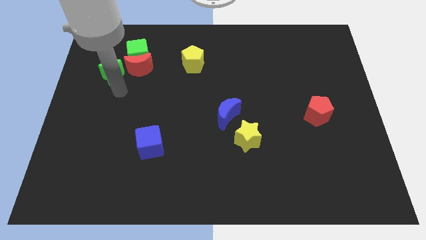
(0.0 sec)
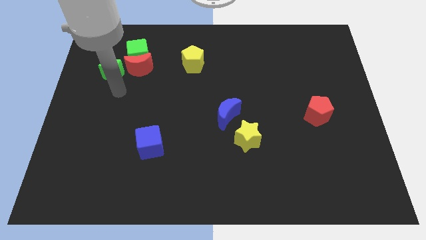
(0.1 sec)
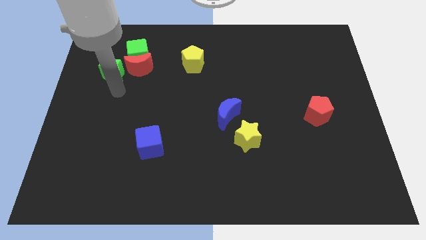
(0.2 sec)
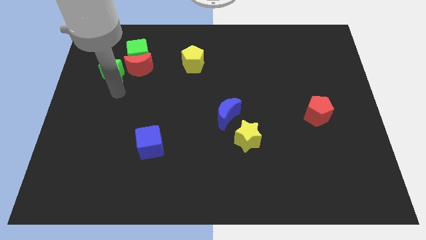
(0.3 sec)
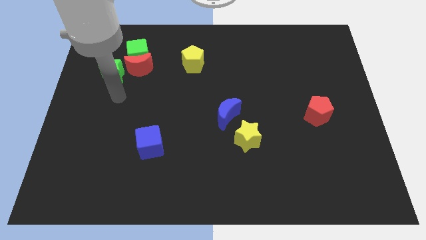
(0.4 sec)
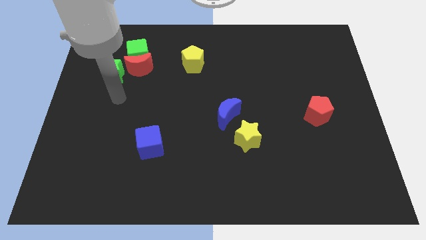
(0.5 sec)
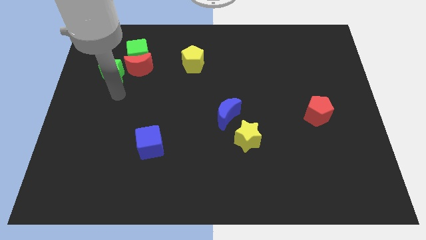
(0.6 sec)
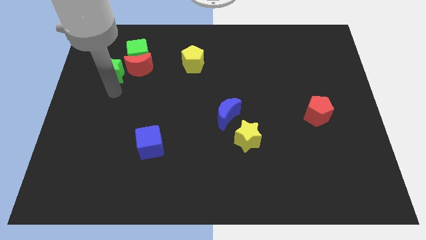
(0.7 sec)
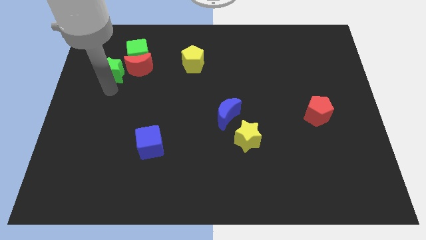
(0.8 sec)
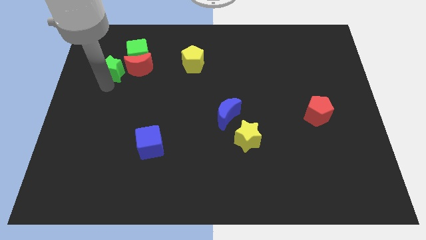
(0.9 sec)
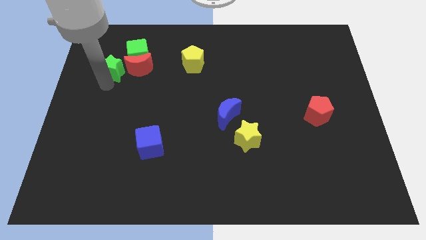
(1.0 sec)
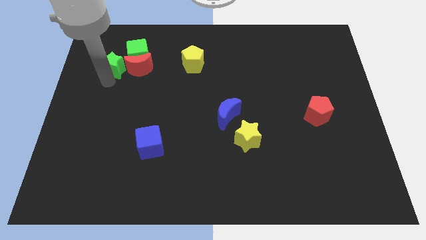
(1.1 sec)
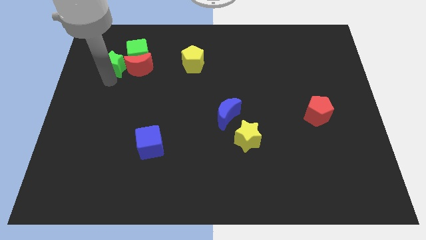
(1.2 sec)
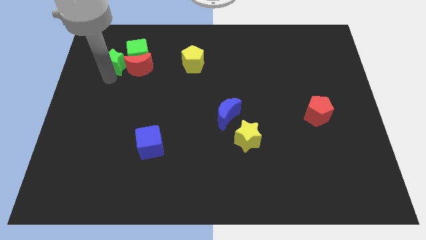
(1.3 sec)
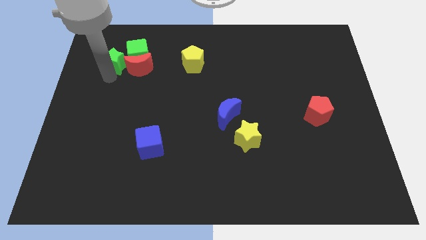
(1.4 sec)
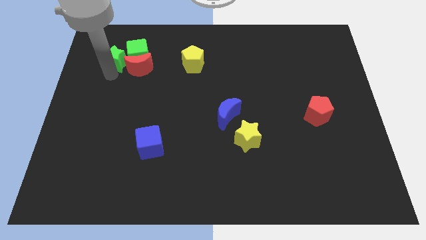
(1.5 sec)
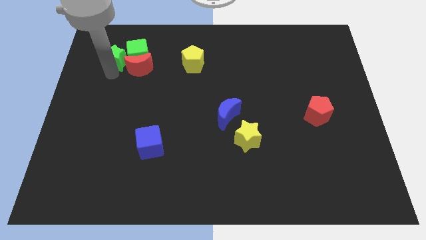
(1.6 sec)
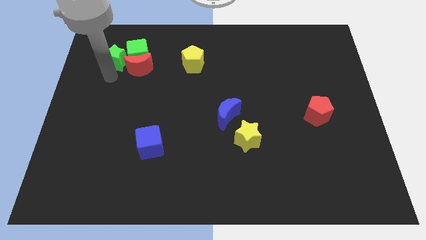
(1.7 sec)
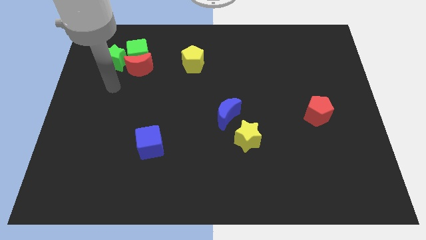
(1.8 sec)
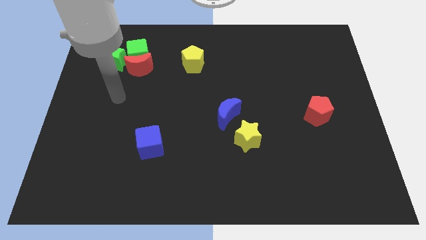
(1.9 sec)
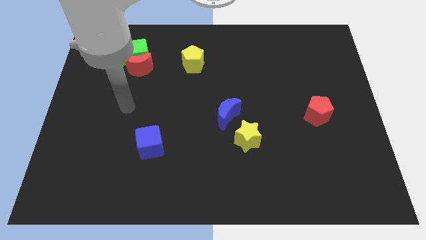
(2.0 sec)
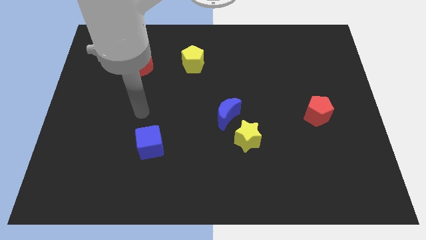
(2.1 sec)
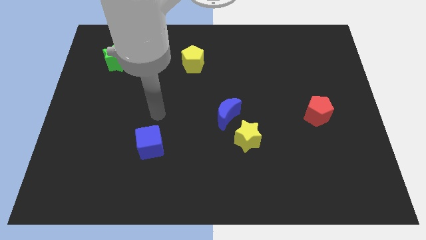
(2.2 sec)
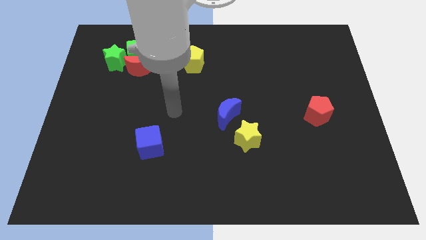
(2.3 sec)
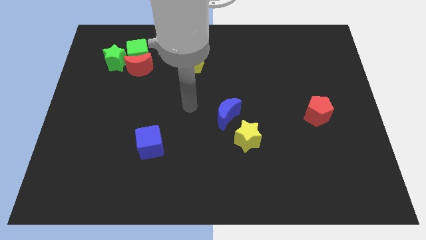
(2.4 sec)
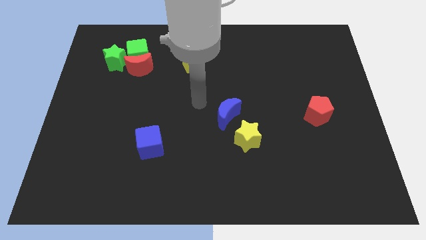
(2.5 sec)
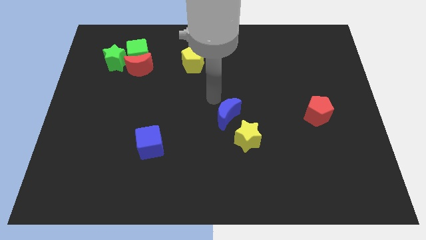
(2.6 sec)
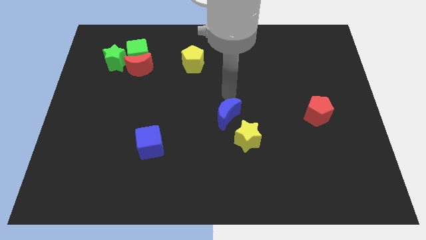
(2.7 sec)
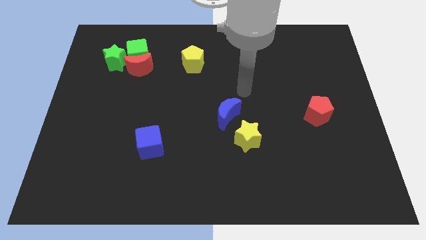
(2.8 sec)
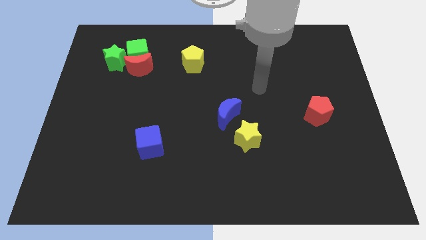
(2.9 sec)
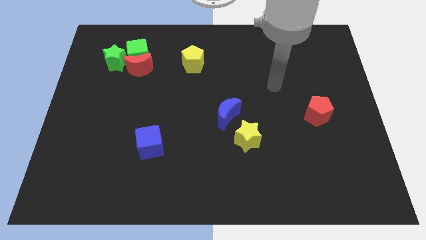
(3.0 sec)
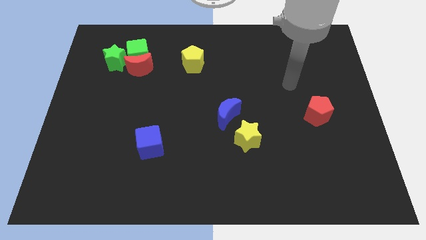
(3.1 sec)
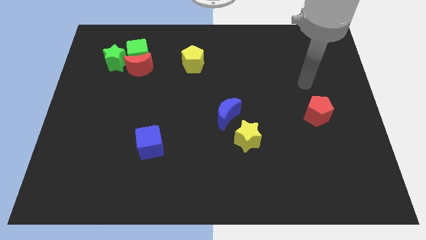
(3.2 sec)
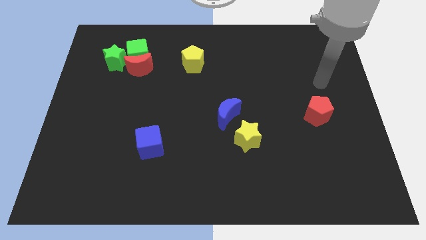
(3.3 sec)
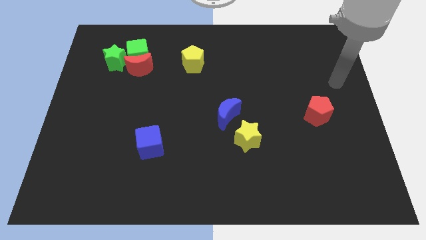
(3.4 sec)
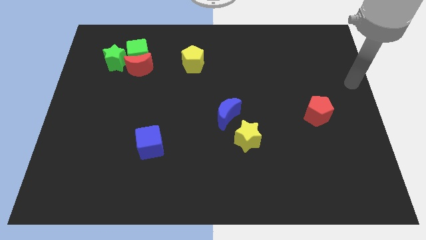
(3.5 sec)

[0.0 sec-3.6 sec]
move the green star close to the left side of the green cube

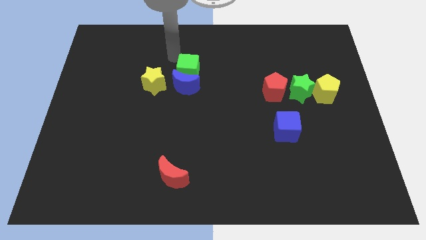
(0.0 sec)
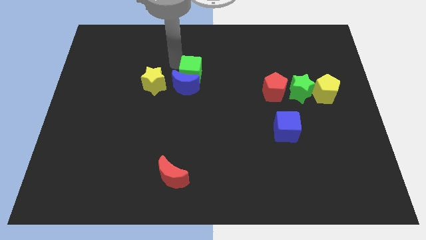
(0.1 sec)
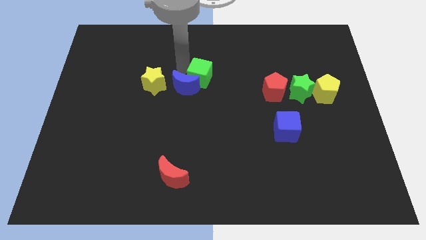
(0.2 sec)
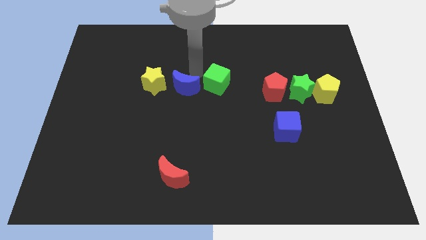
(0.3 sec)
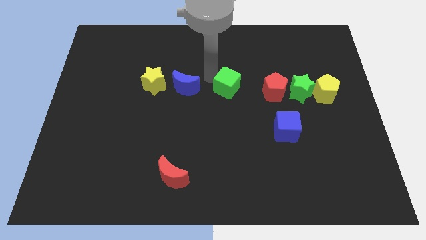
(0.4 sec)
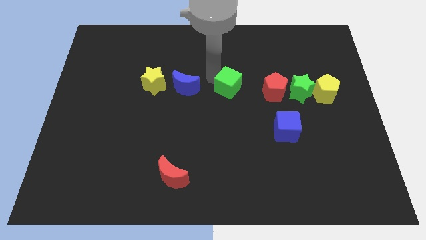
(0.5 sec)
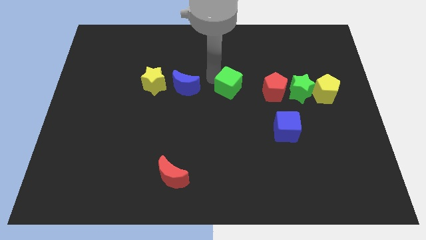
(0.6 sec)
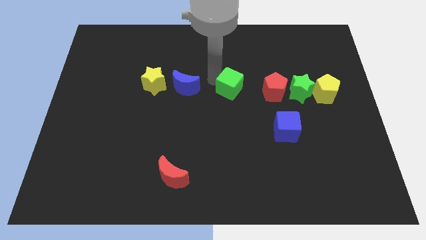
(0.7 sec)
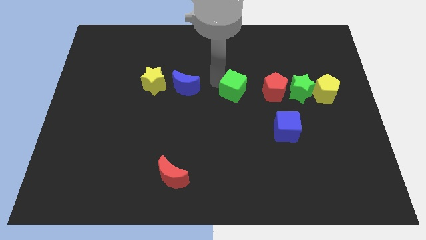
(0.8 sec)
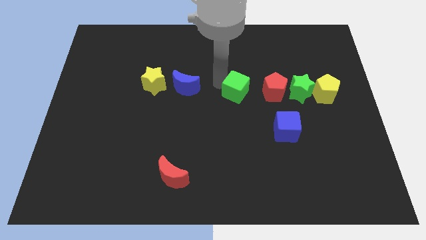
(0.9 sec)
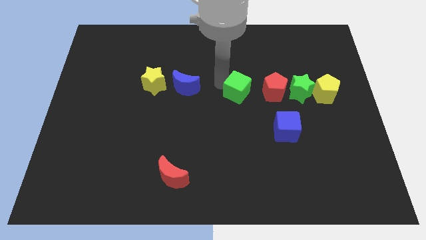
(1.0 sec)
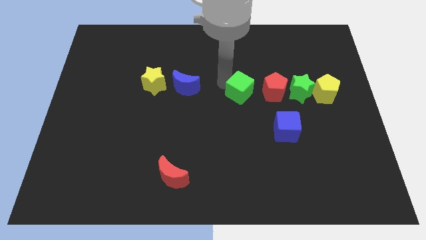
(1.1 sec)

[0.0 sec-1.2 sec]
push the green cube left to the red pentagon

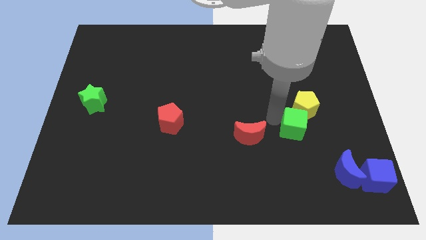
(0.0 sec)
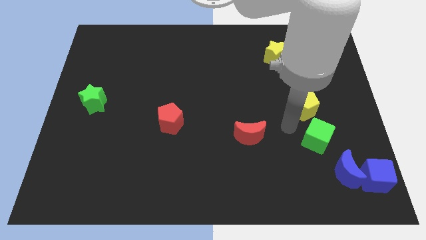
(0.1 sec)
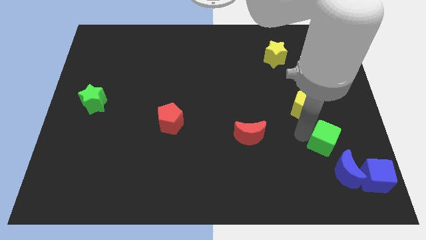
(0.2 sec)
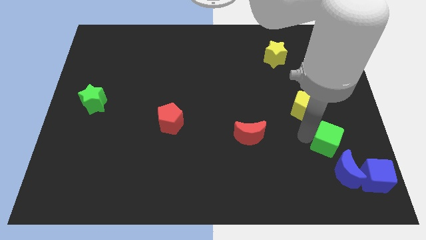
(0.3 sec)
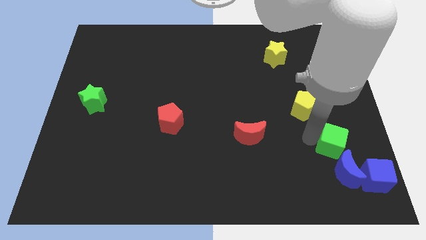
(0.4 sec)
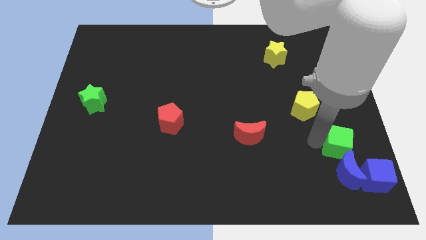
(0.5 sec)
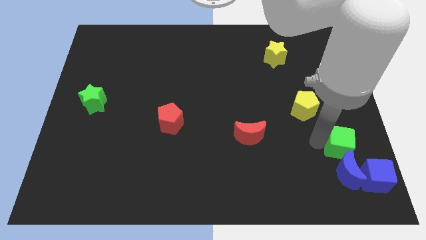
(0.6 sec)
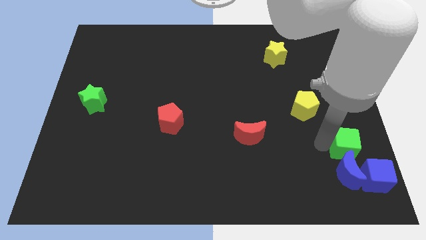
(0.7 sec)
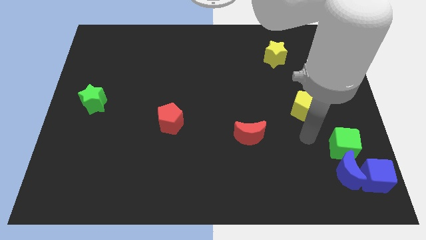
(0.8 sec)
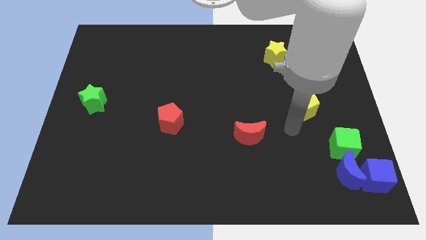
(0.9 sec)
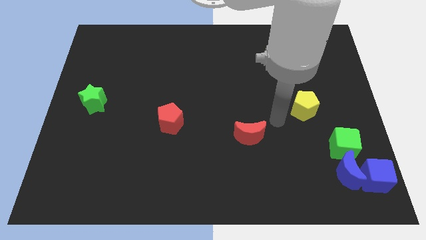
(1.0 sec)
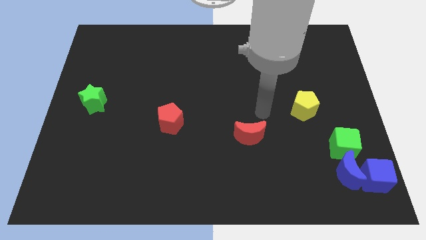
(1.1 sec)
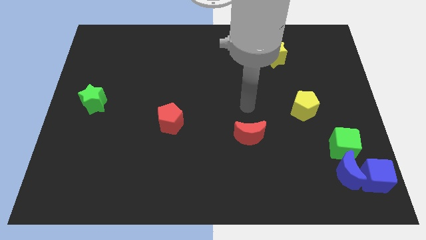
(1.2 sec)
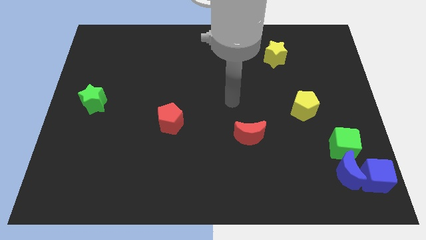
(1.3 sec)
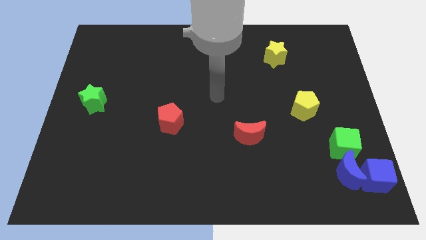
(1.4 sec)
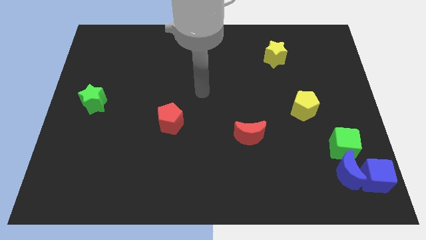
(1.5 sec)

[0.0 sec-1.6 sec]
push the green cube into the blue moon

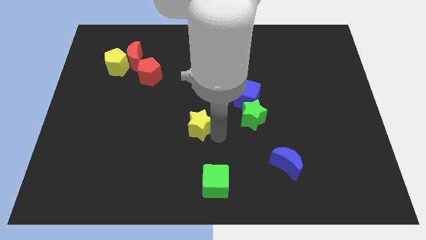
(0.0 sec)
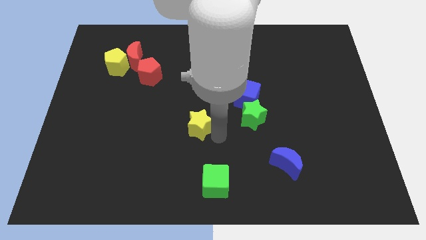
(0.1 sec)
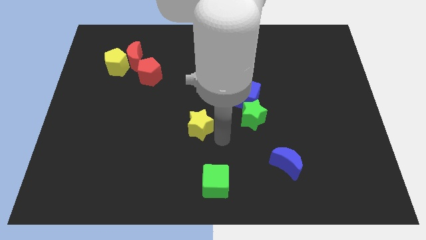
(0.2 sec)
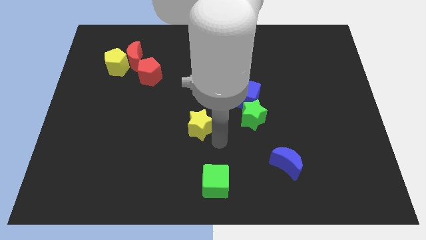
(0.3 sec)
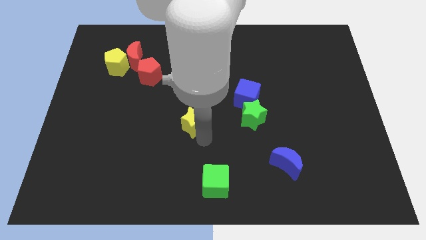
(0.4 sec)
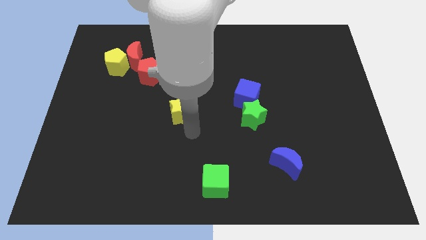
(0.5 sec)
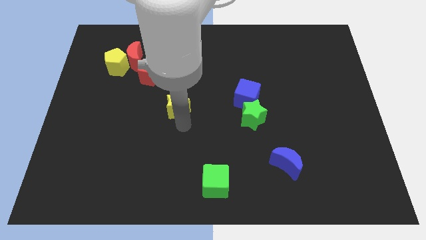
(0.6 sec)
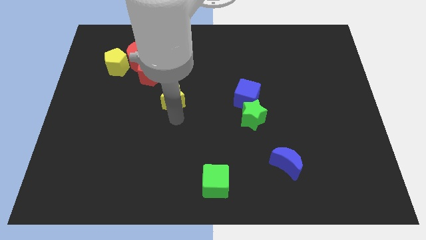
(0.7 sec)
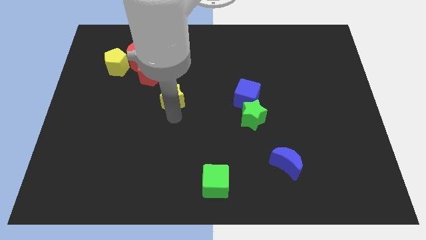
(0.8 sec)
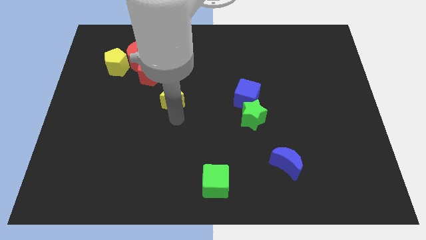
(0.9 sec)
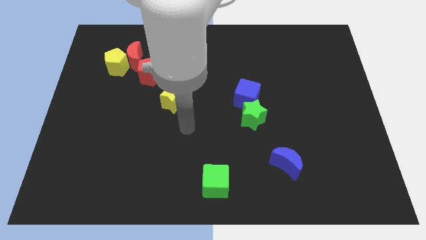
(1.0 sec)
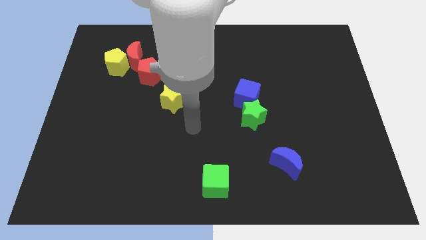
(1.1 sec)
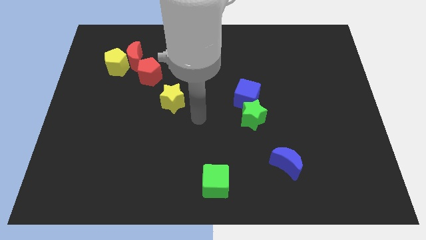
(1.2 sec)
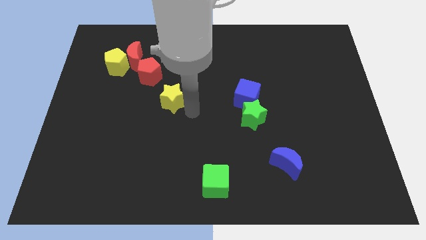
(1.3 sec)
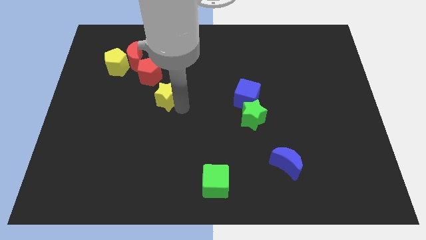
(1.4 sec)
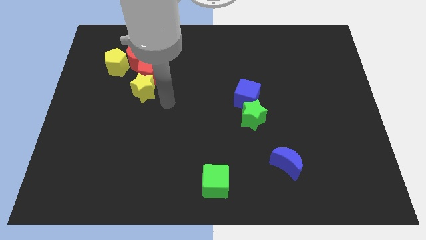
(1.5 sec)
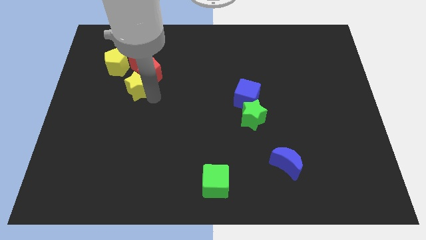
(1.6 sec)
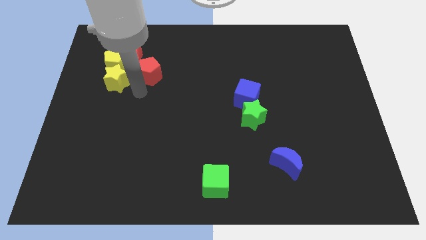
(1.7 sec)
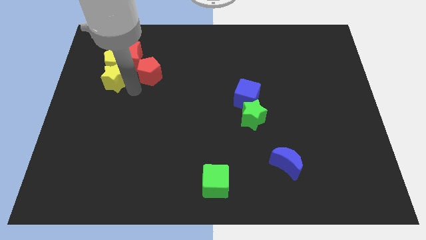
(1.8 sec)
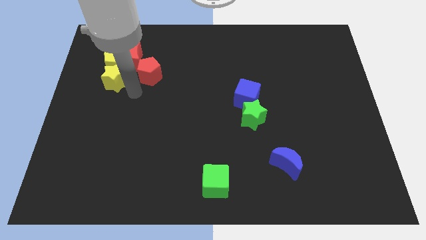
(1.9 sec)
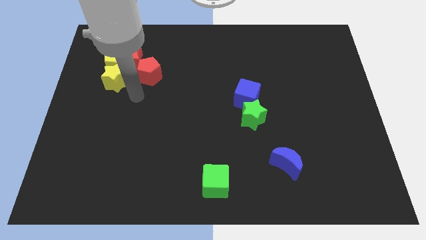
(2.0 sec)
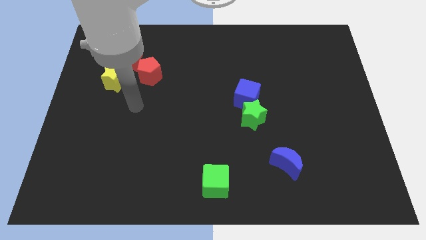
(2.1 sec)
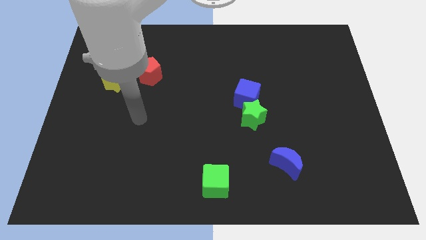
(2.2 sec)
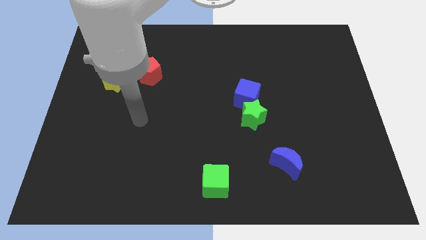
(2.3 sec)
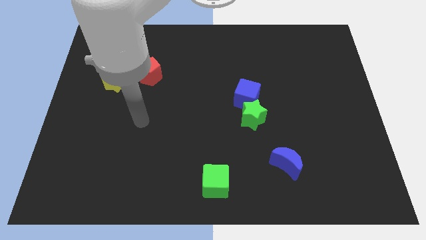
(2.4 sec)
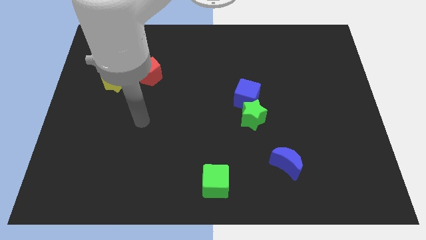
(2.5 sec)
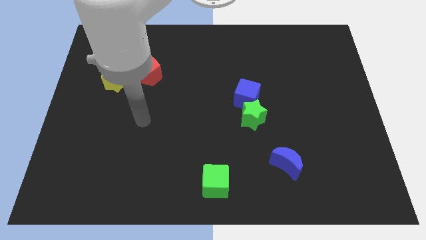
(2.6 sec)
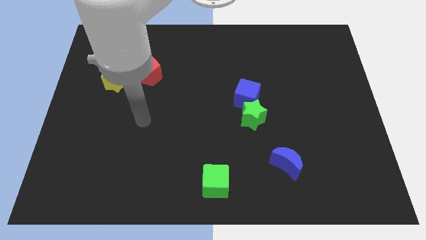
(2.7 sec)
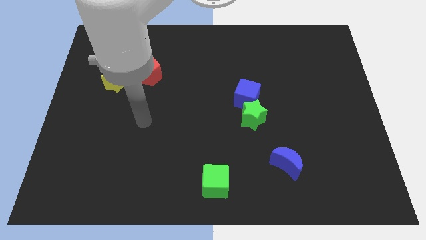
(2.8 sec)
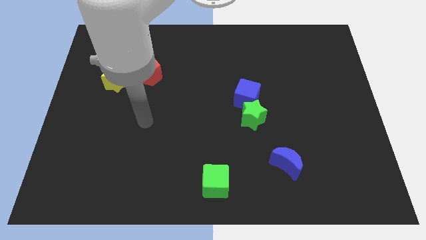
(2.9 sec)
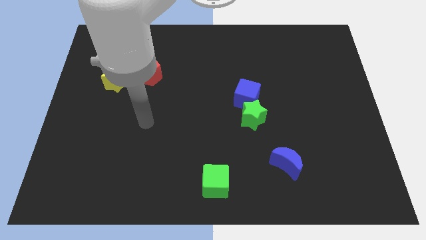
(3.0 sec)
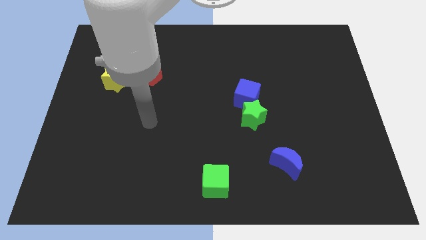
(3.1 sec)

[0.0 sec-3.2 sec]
push the yellow star into a group of blocks
